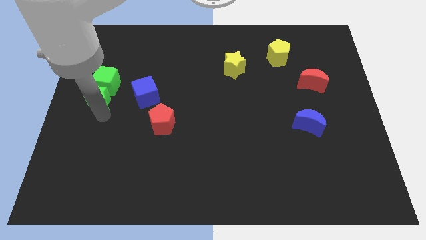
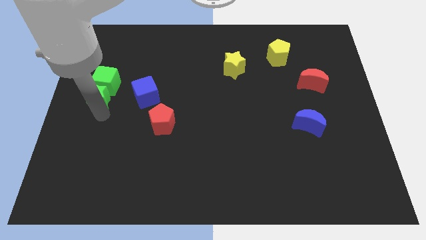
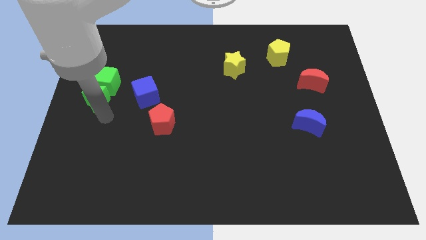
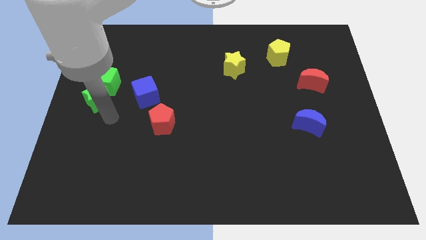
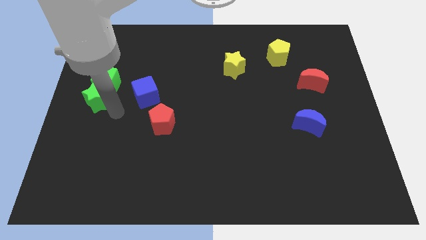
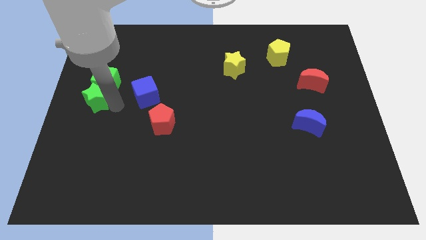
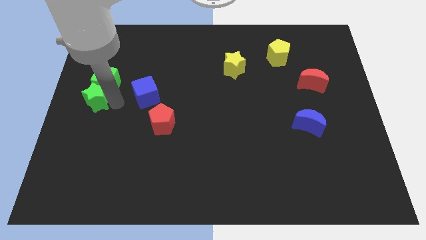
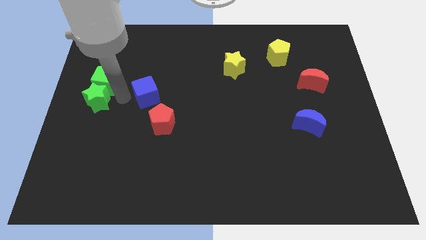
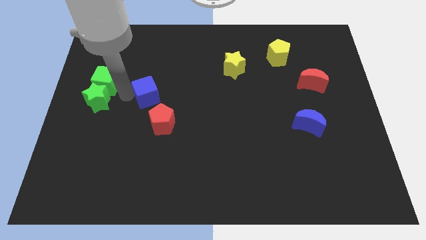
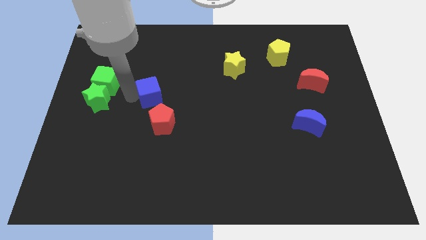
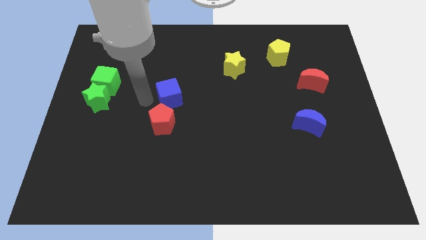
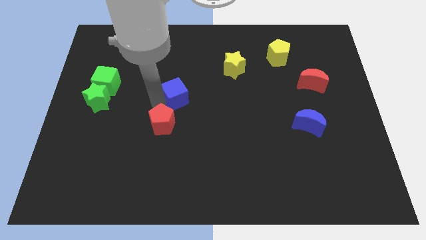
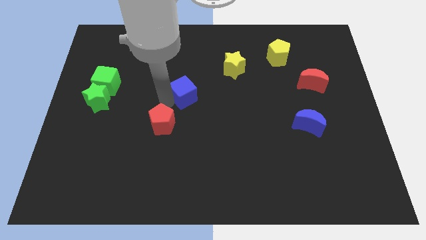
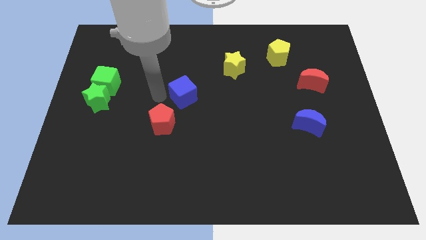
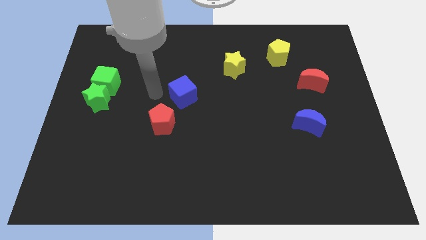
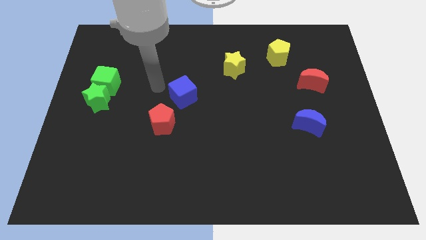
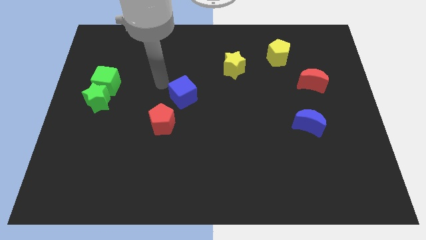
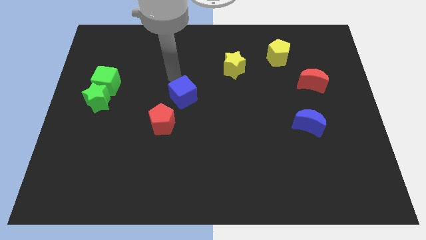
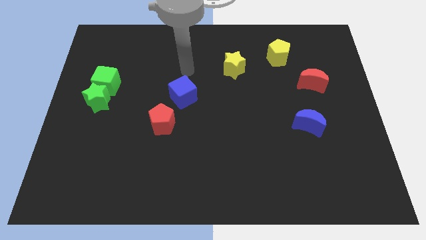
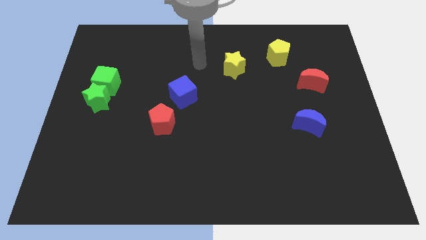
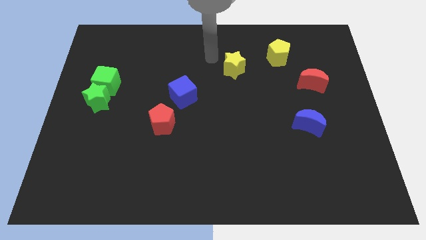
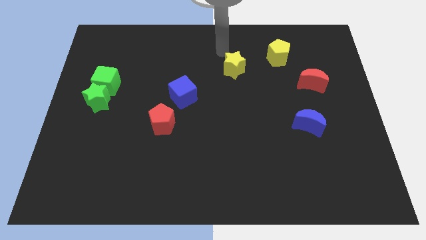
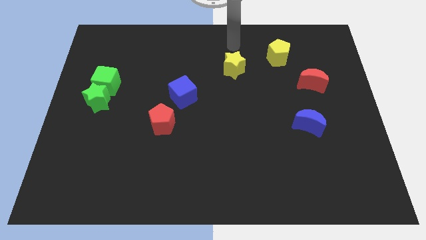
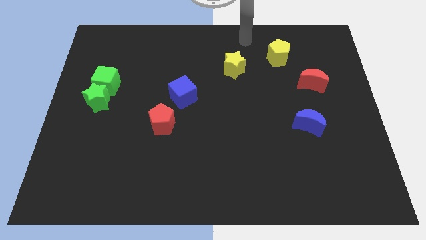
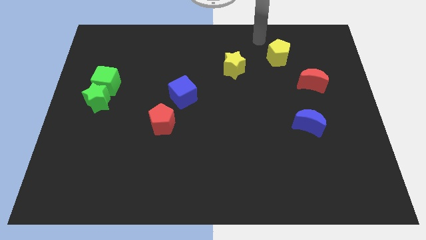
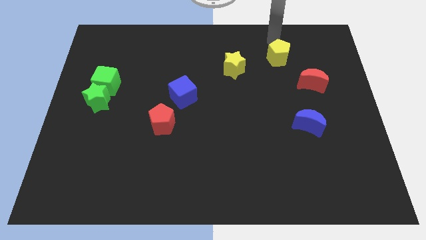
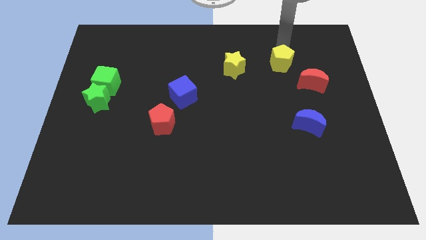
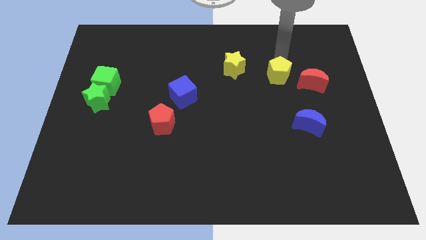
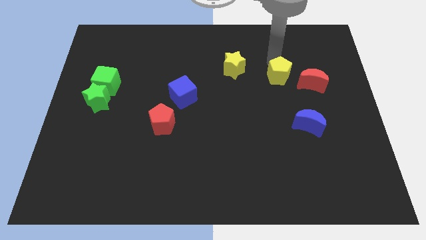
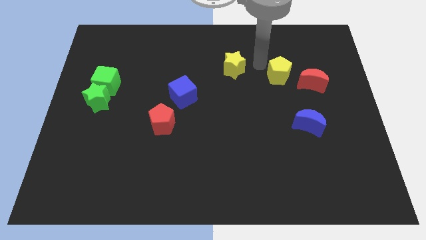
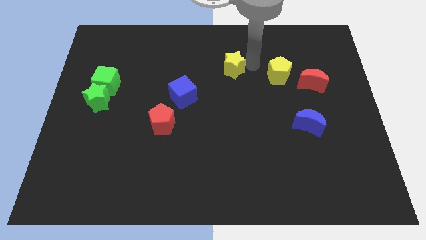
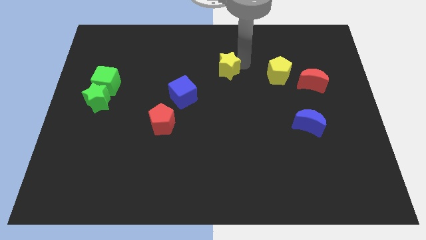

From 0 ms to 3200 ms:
move the yellow pentagon to the top of the red crescent

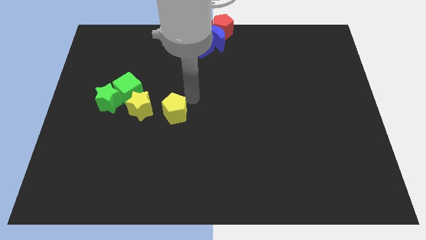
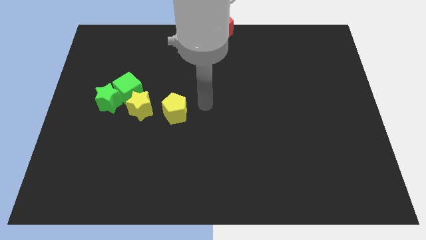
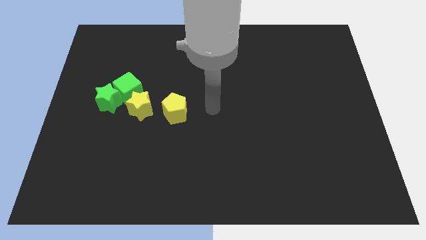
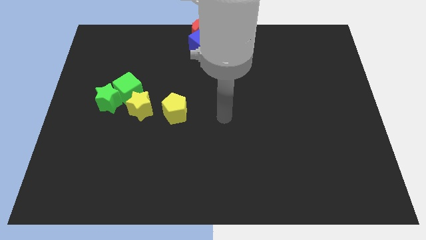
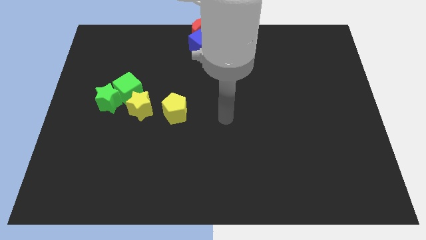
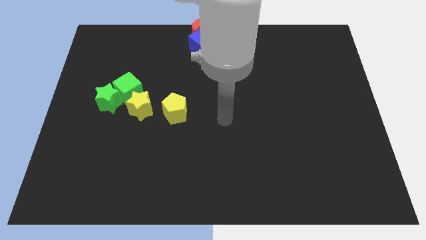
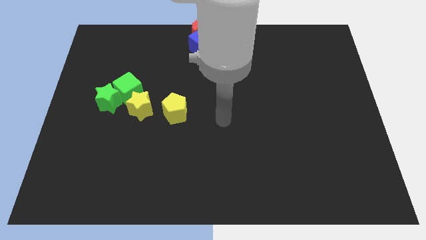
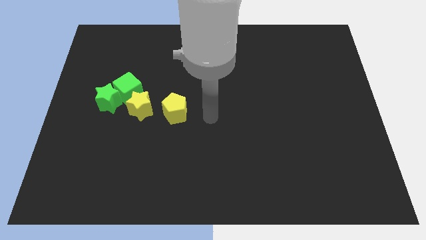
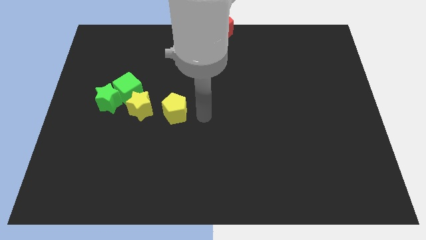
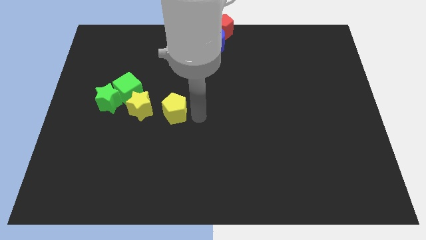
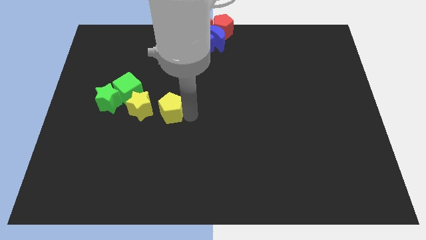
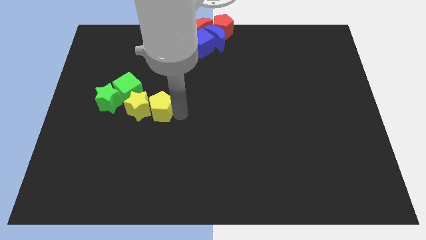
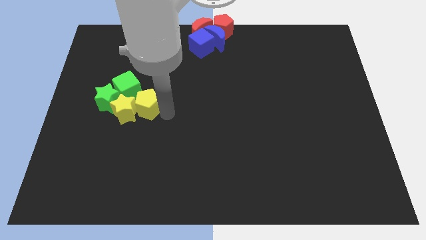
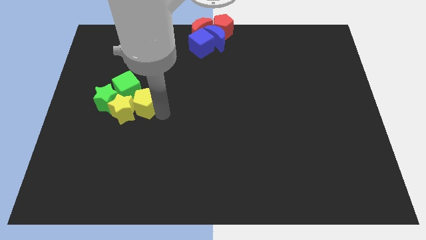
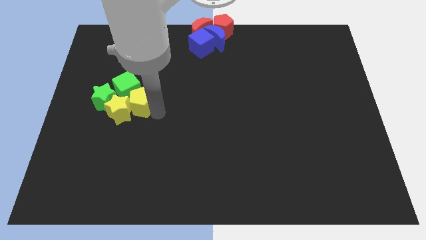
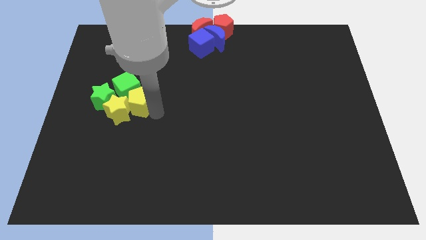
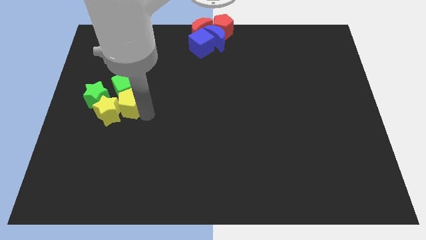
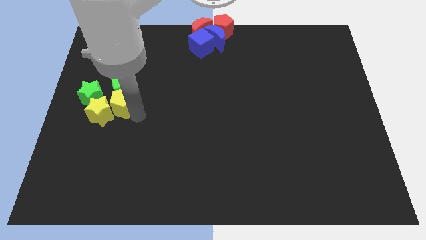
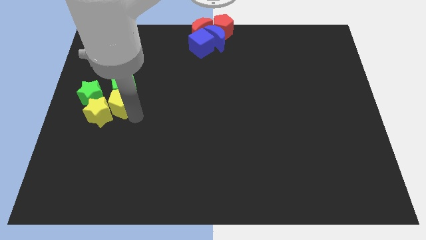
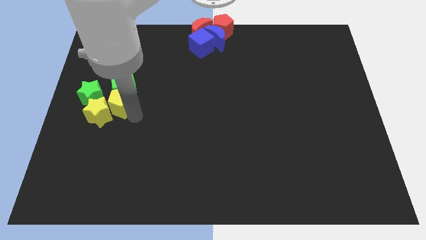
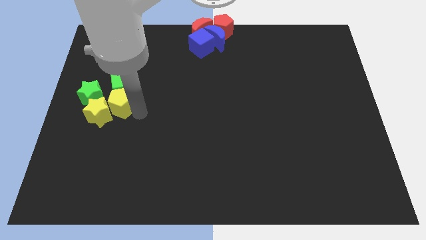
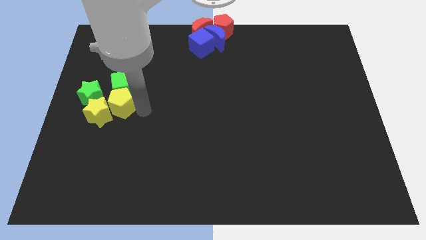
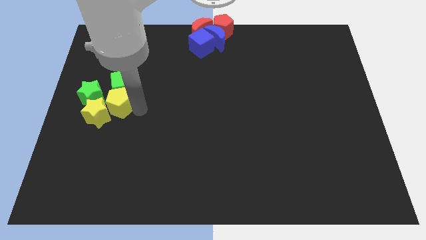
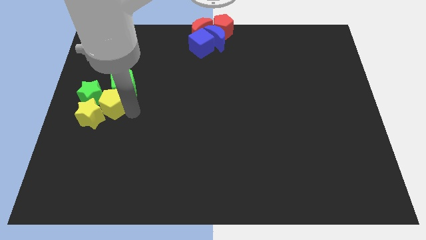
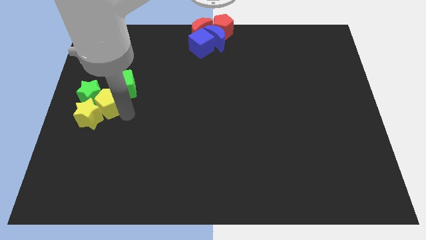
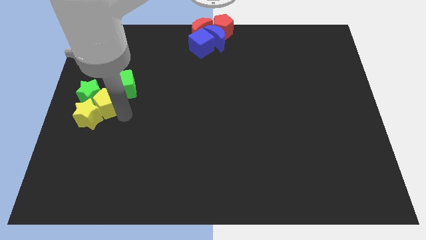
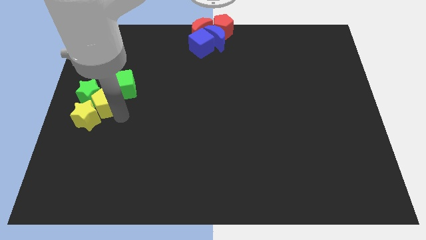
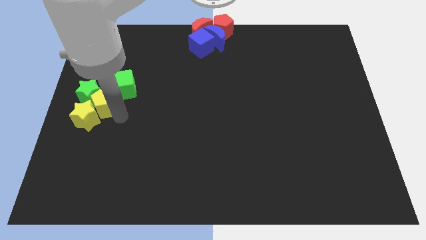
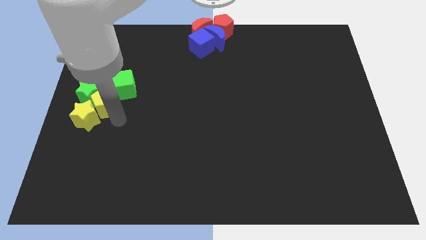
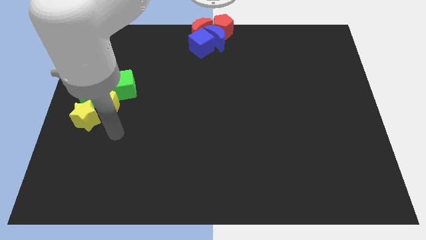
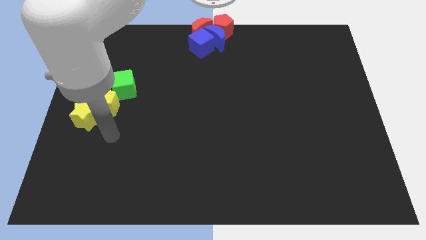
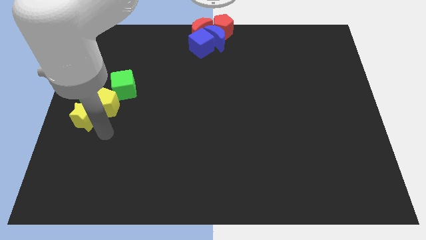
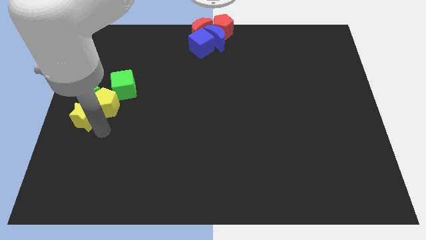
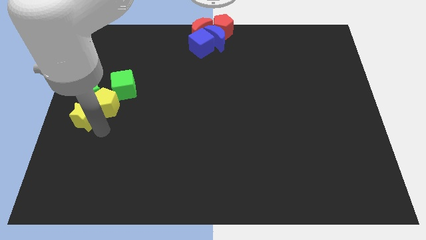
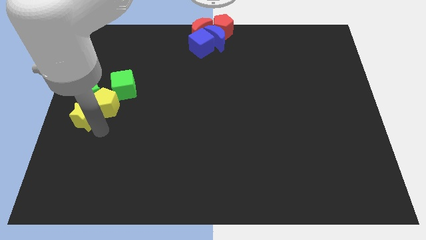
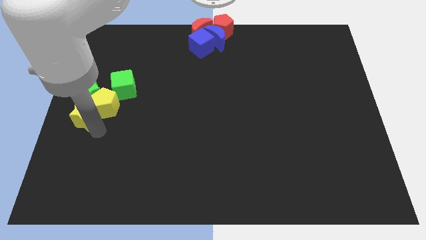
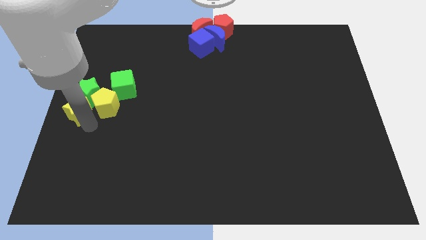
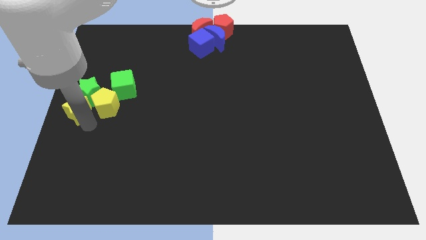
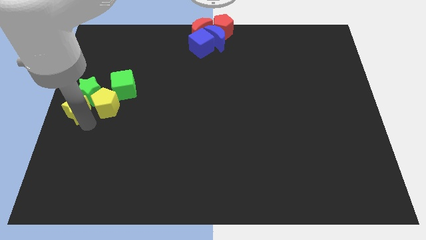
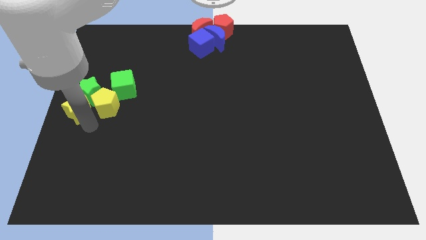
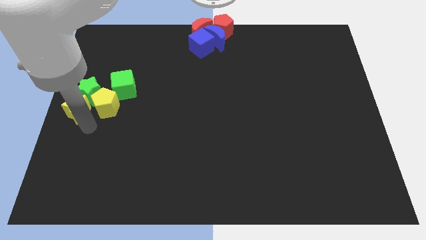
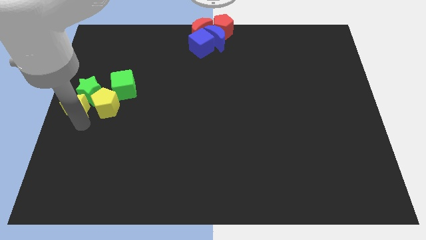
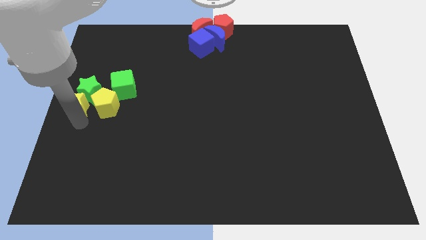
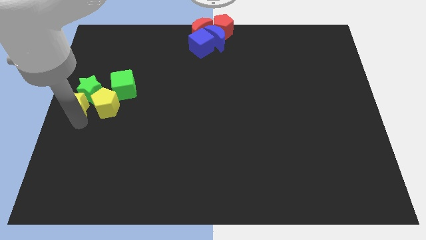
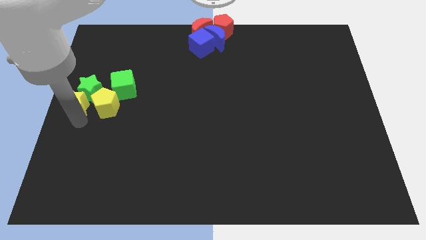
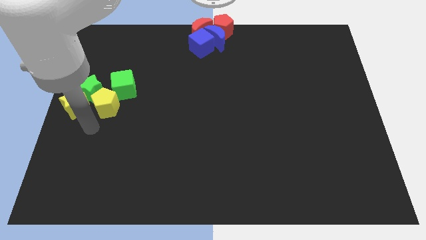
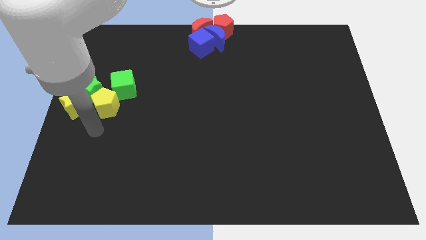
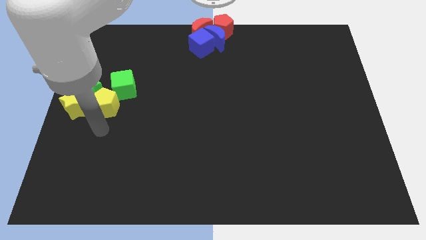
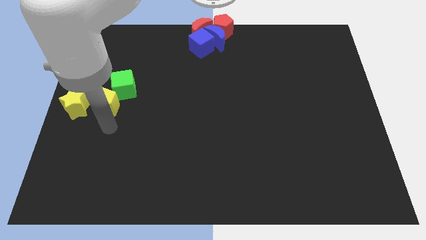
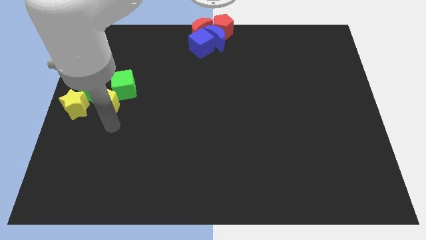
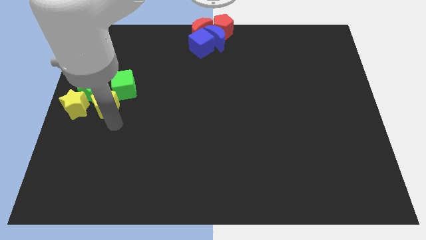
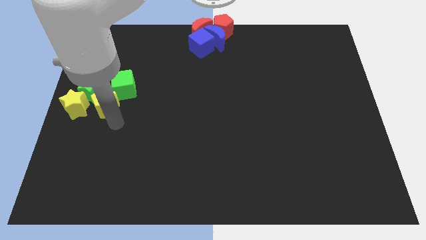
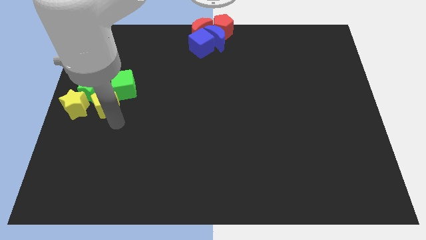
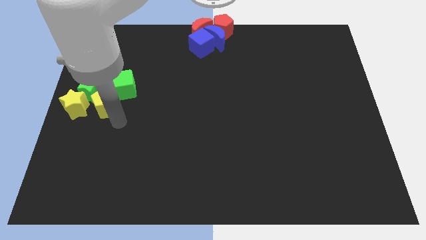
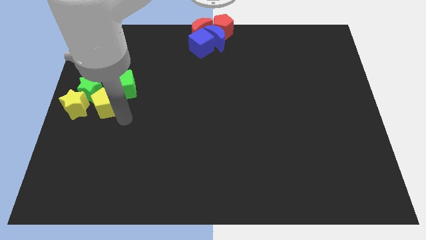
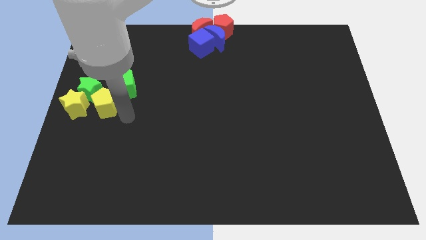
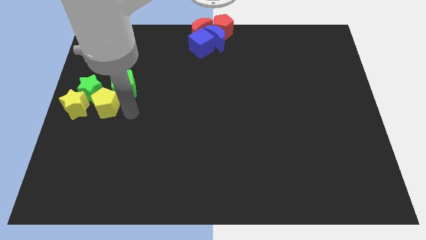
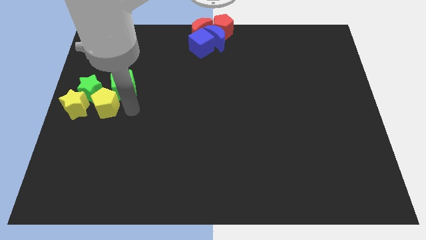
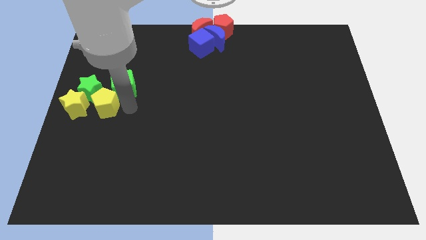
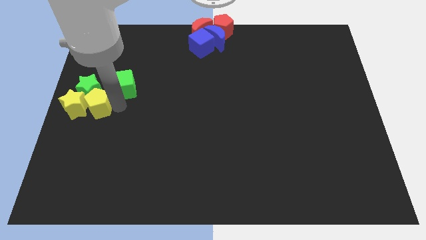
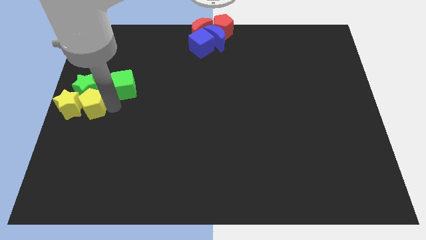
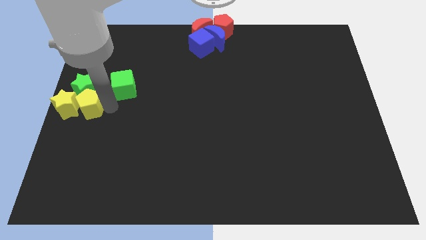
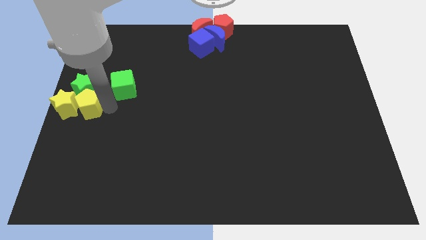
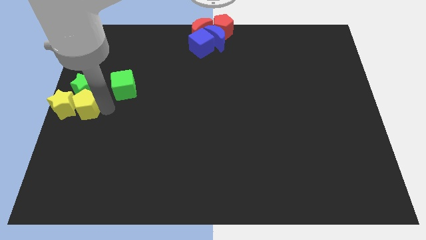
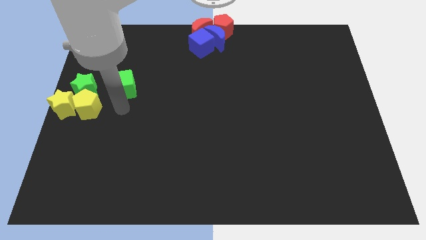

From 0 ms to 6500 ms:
push yellow pentagon and the yellow star to the center
